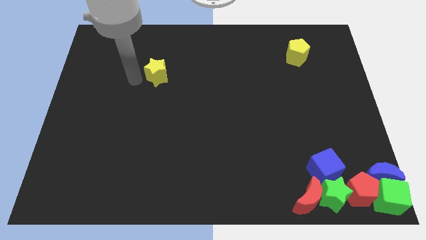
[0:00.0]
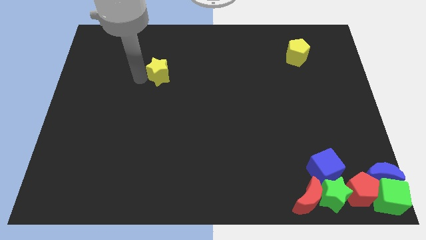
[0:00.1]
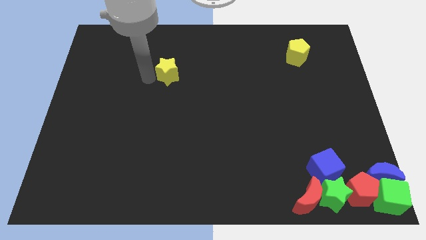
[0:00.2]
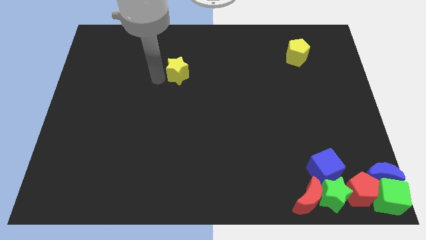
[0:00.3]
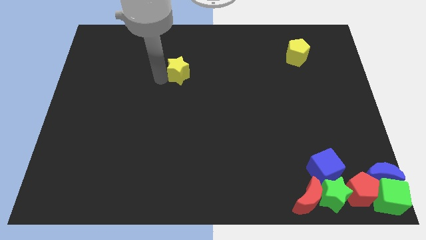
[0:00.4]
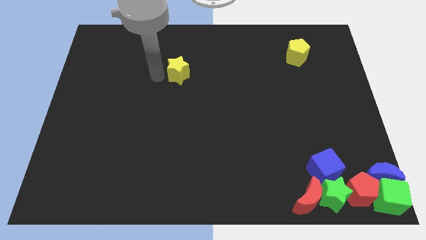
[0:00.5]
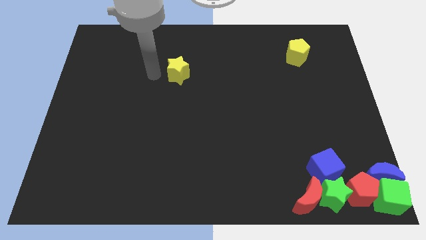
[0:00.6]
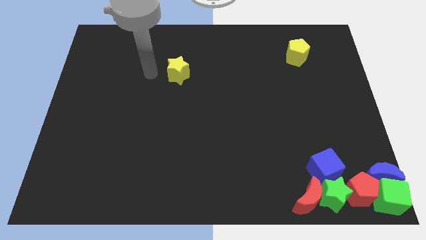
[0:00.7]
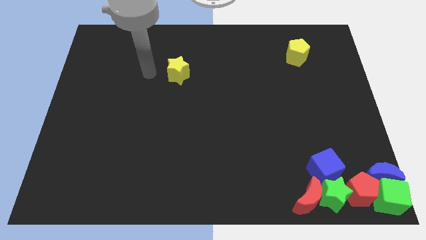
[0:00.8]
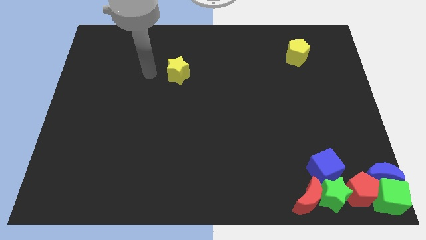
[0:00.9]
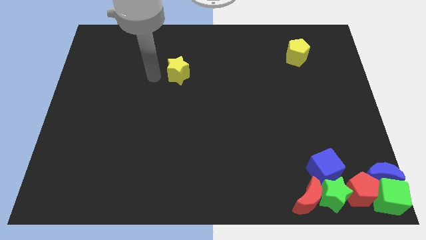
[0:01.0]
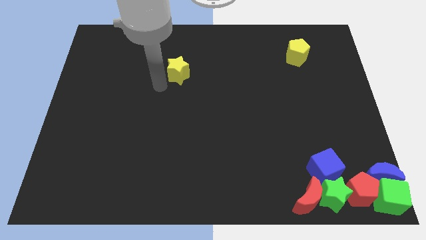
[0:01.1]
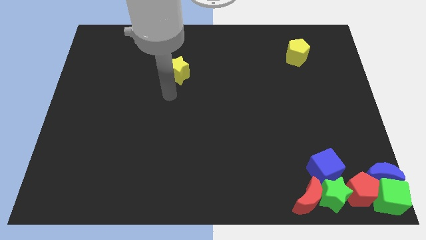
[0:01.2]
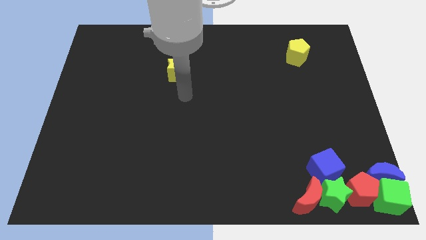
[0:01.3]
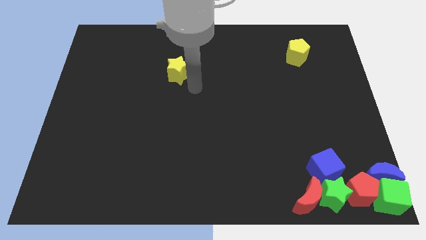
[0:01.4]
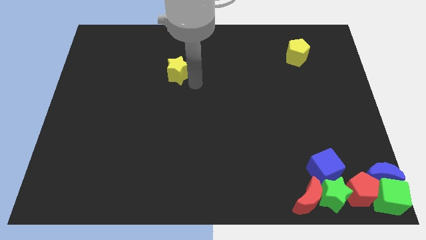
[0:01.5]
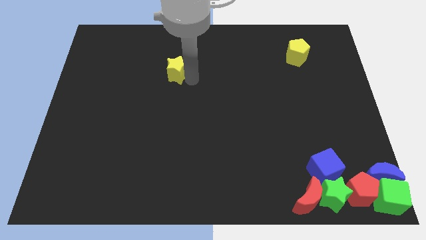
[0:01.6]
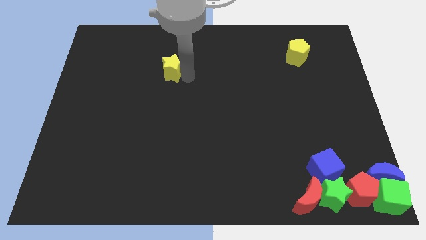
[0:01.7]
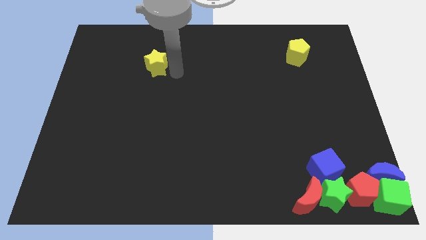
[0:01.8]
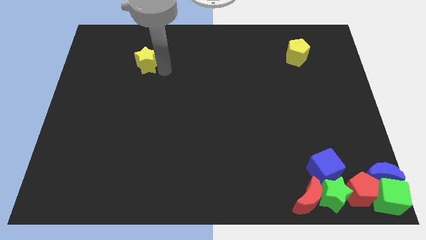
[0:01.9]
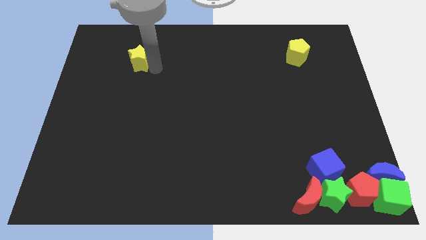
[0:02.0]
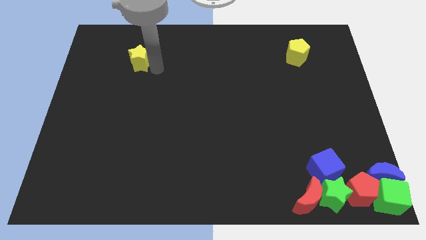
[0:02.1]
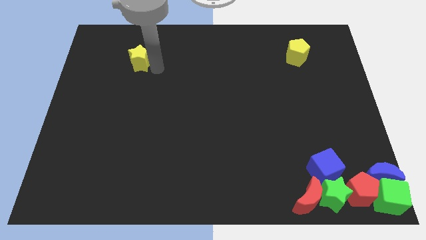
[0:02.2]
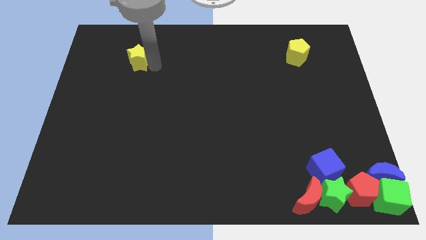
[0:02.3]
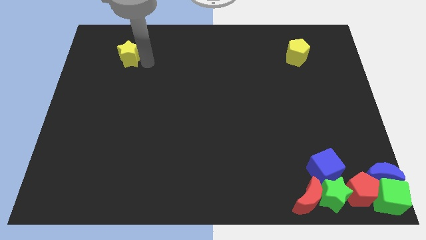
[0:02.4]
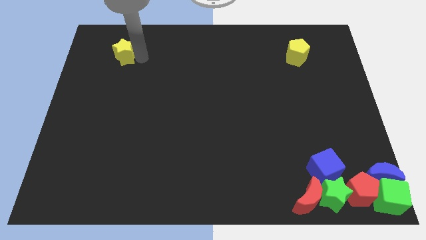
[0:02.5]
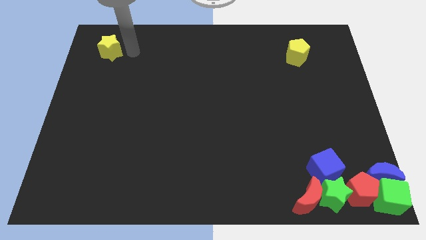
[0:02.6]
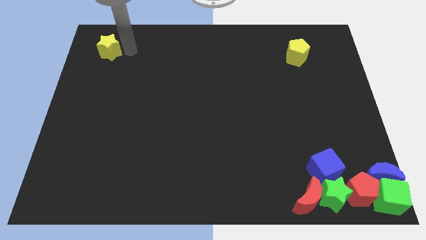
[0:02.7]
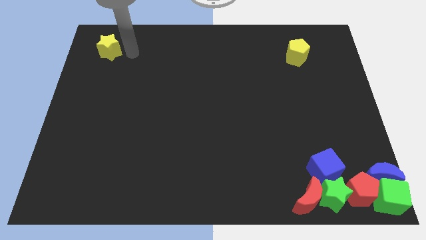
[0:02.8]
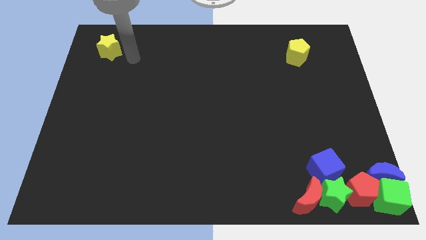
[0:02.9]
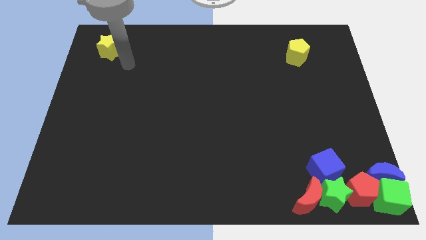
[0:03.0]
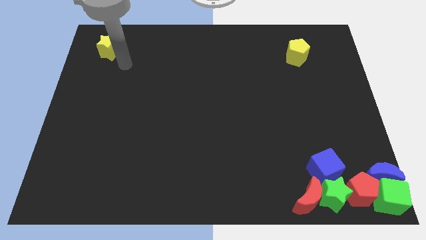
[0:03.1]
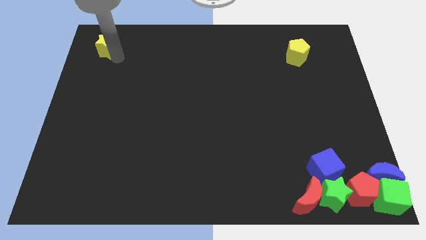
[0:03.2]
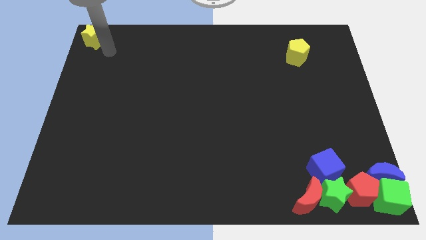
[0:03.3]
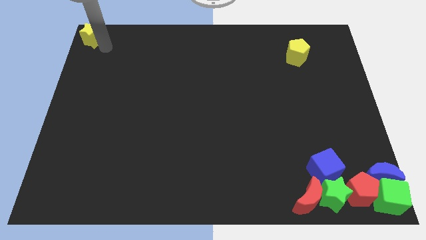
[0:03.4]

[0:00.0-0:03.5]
push the yellow star to the top left corner of the board

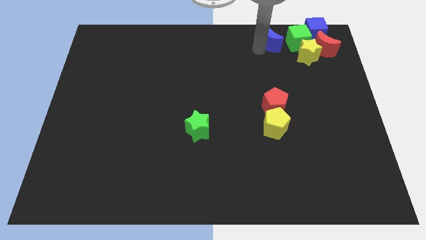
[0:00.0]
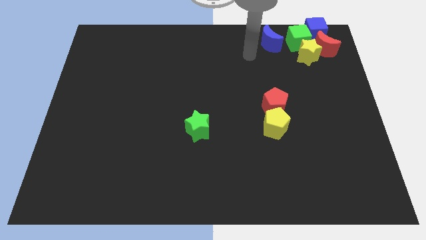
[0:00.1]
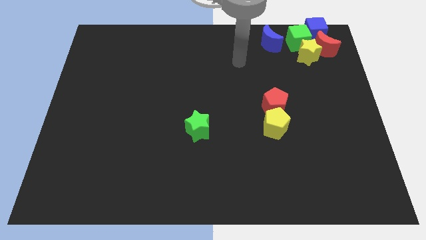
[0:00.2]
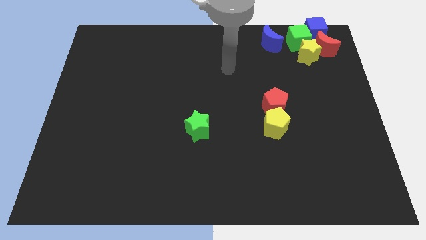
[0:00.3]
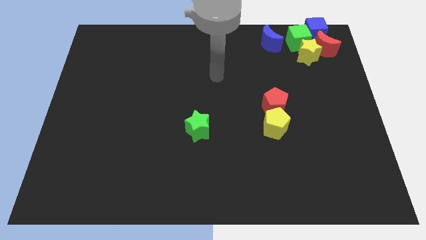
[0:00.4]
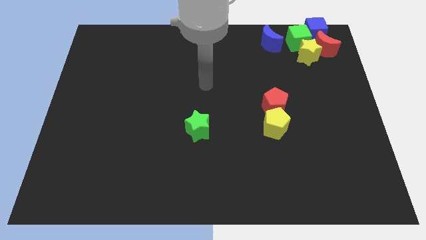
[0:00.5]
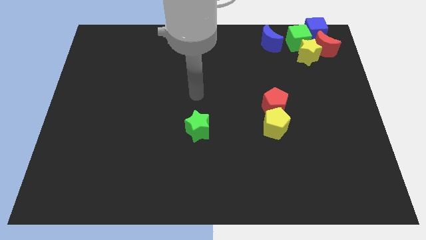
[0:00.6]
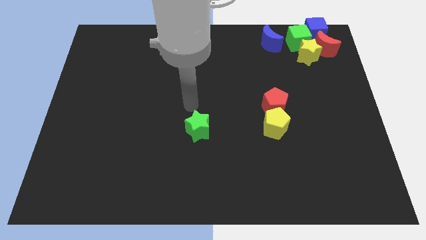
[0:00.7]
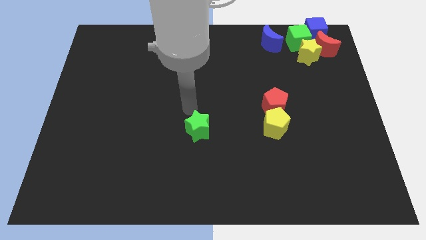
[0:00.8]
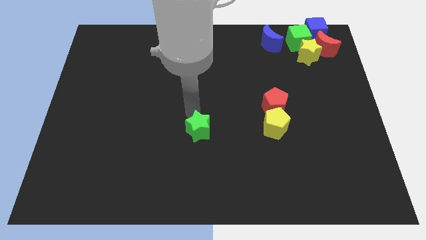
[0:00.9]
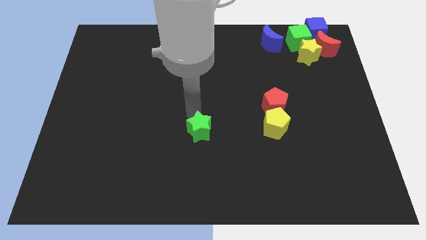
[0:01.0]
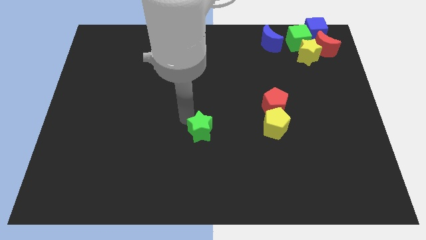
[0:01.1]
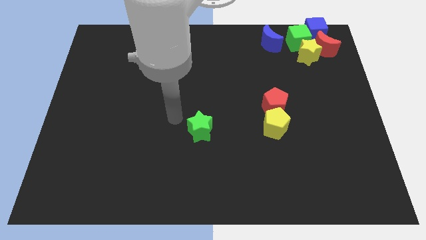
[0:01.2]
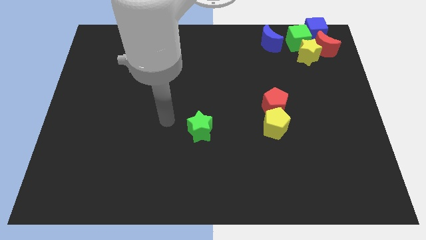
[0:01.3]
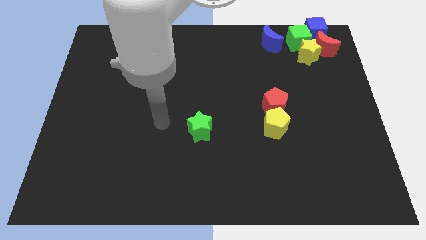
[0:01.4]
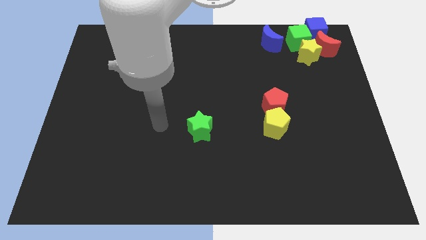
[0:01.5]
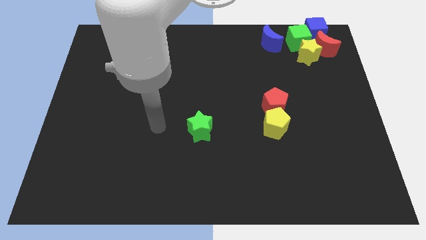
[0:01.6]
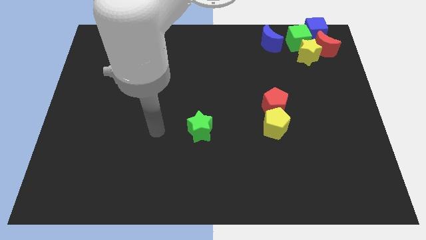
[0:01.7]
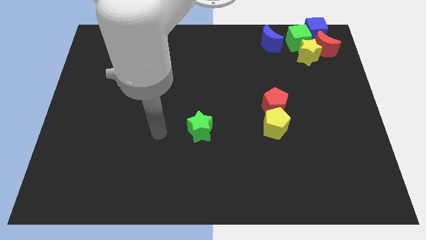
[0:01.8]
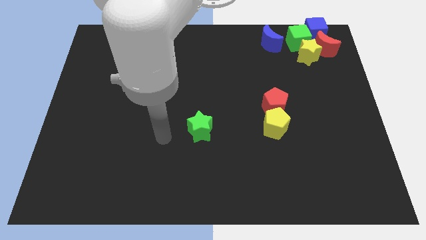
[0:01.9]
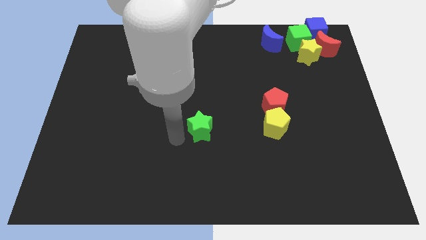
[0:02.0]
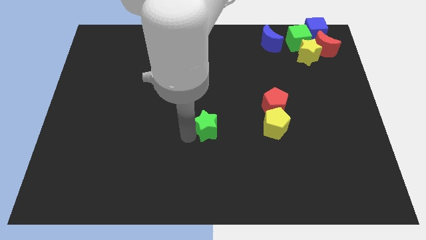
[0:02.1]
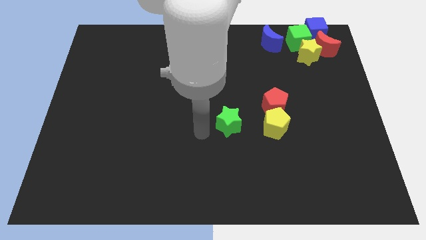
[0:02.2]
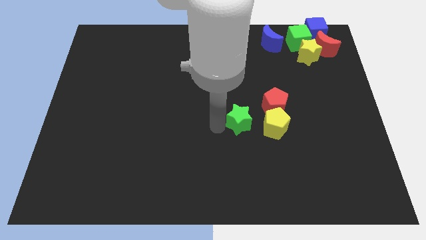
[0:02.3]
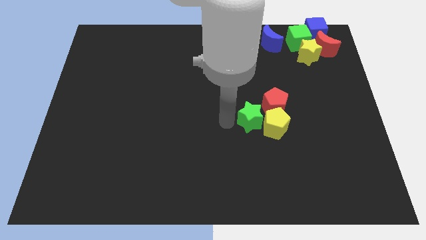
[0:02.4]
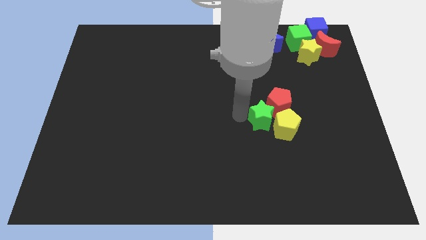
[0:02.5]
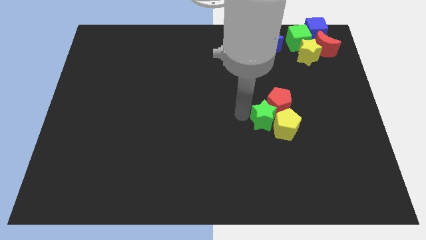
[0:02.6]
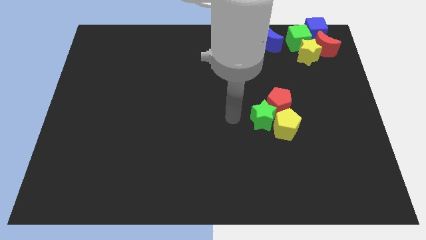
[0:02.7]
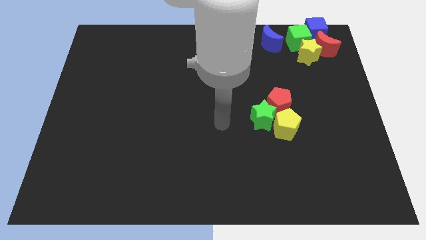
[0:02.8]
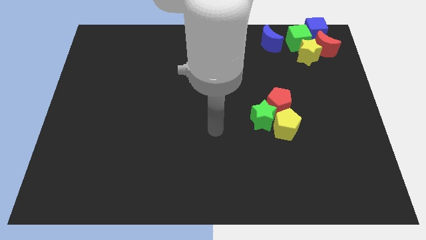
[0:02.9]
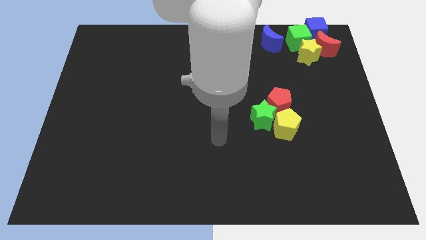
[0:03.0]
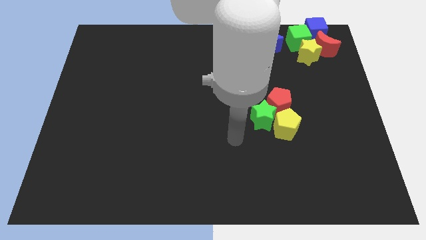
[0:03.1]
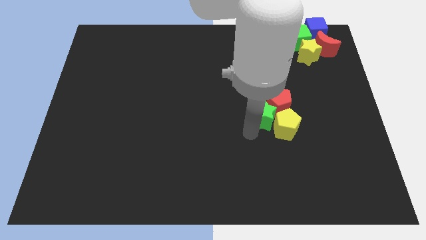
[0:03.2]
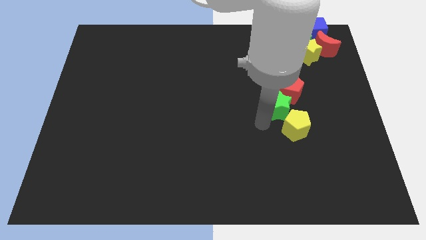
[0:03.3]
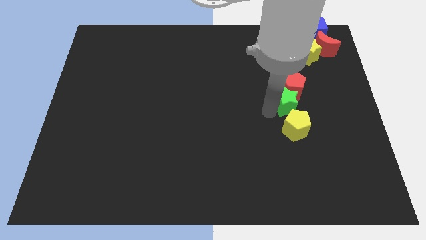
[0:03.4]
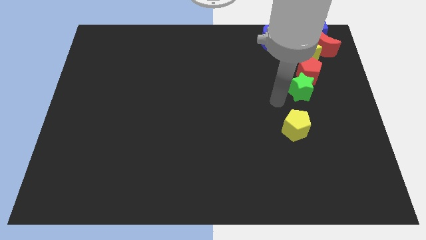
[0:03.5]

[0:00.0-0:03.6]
push the green star and the red pentagon to the bottom of the yellow star

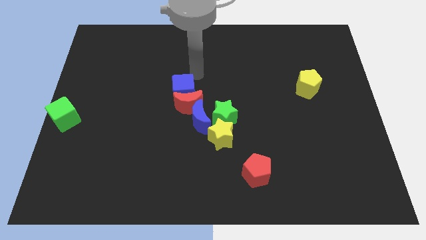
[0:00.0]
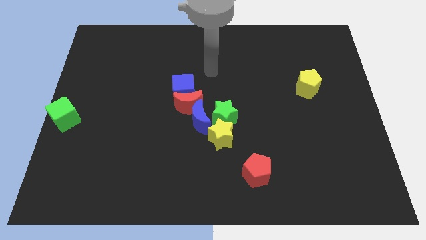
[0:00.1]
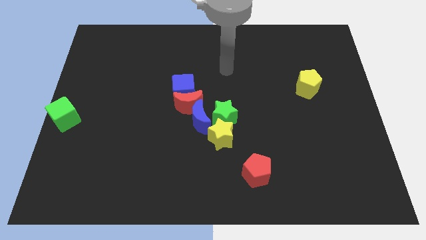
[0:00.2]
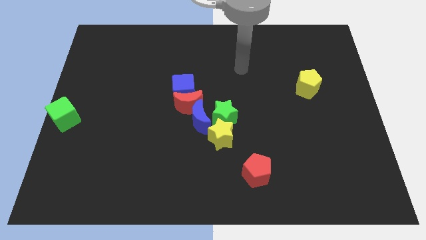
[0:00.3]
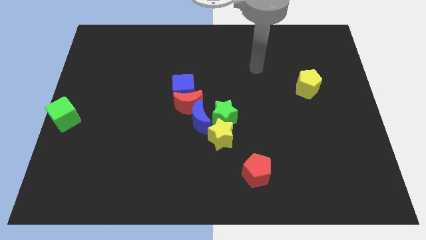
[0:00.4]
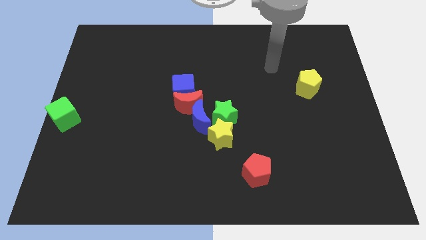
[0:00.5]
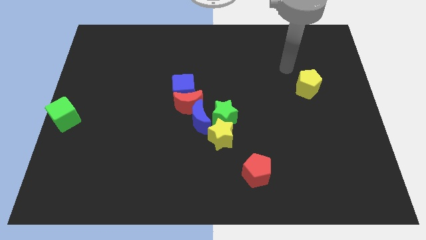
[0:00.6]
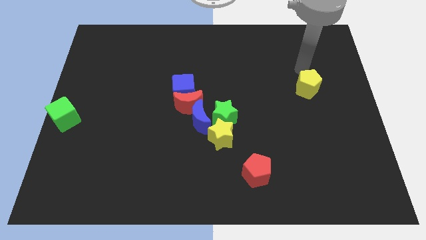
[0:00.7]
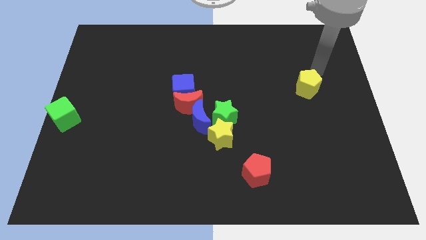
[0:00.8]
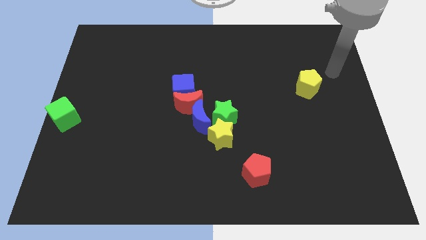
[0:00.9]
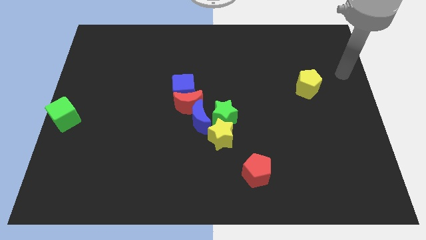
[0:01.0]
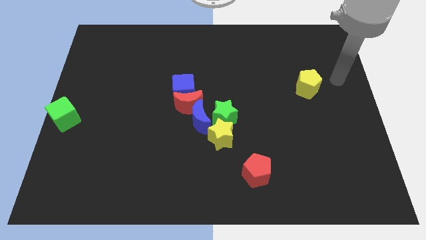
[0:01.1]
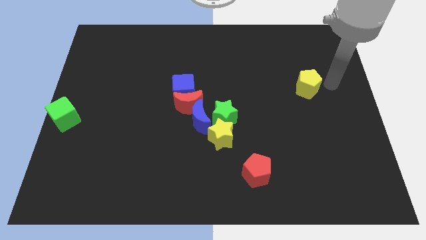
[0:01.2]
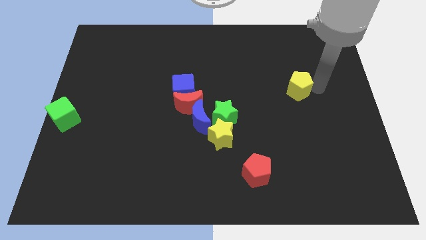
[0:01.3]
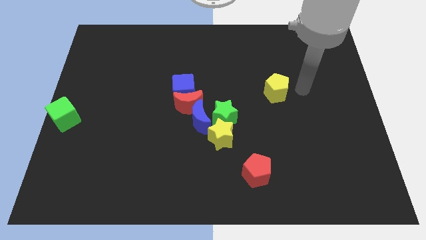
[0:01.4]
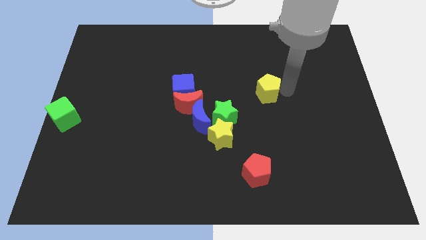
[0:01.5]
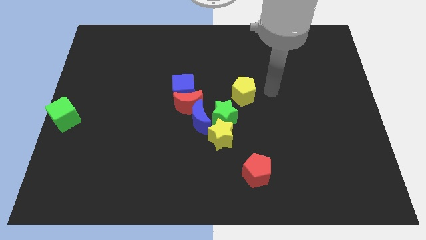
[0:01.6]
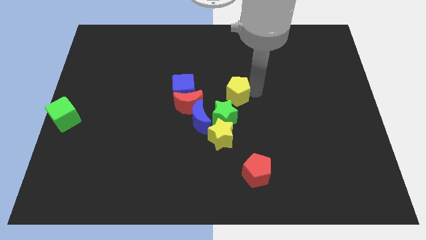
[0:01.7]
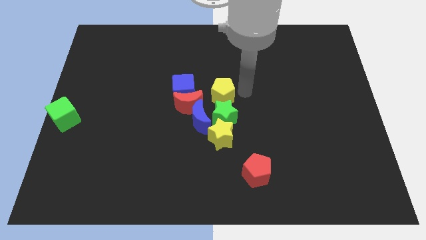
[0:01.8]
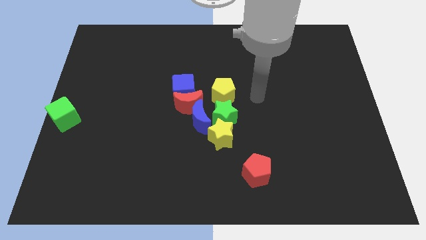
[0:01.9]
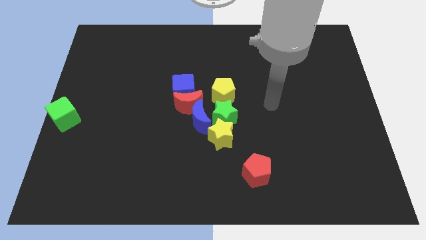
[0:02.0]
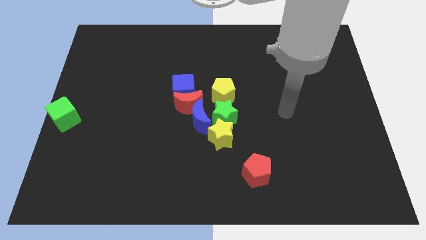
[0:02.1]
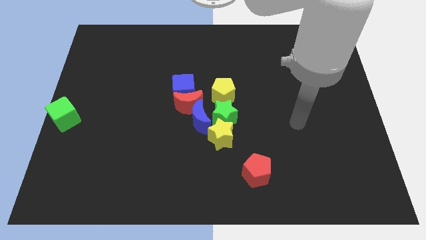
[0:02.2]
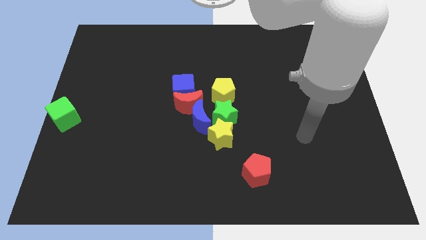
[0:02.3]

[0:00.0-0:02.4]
put the yellow pentagon above the green star
